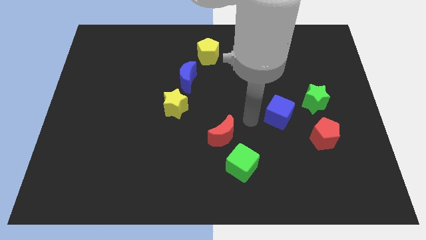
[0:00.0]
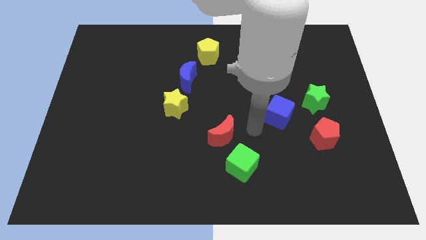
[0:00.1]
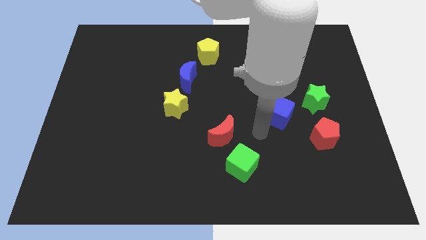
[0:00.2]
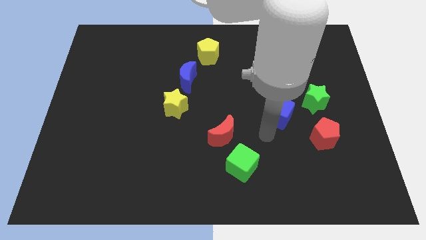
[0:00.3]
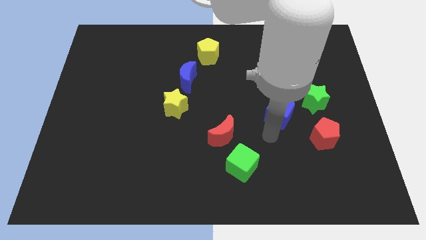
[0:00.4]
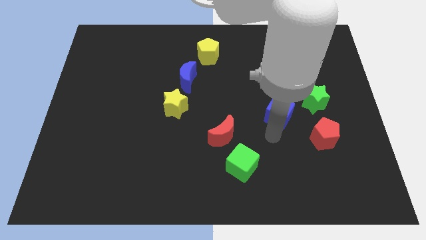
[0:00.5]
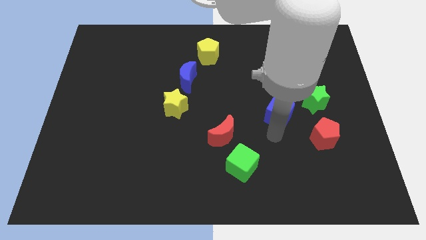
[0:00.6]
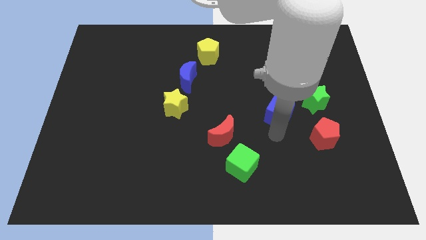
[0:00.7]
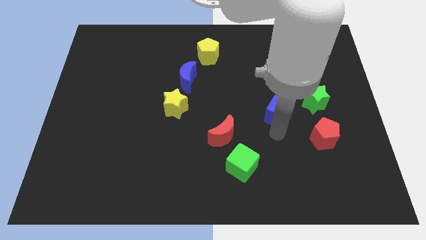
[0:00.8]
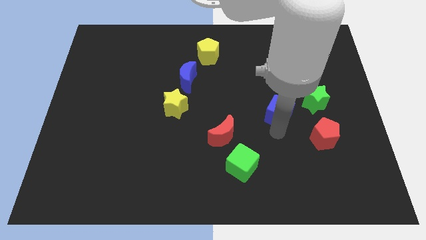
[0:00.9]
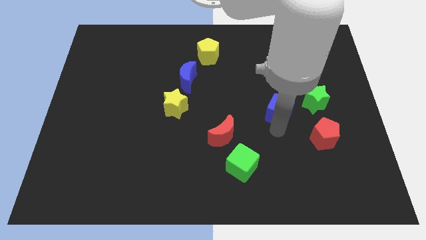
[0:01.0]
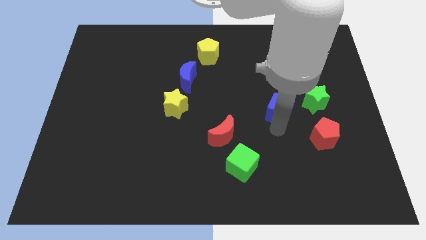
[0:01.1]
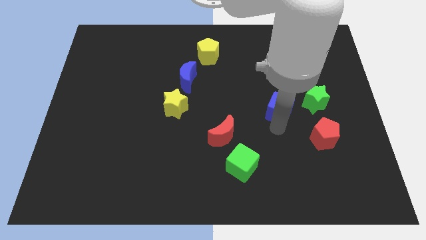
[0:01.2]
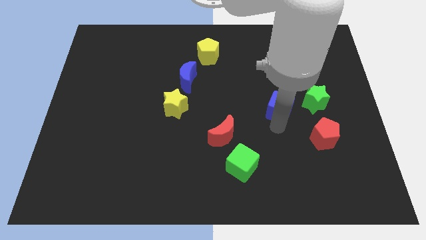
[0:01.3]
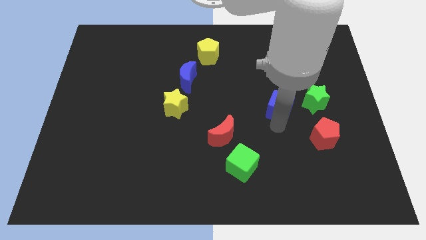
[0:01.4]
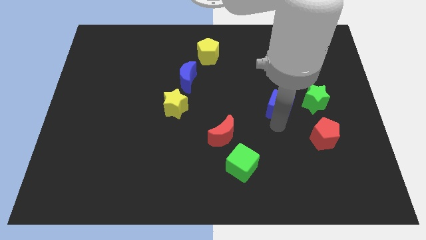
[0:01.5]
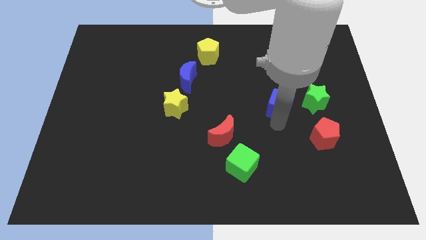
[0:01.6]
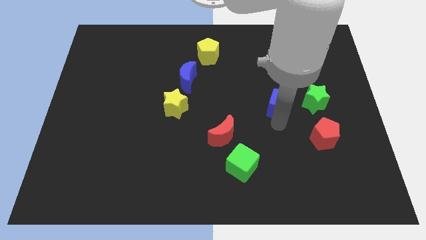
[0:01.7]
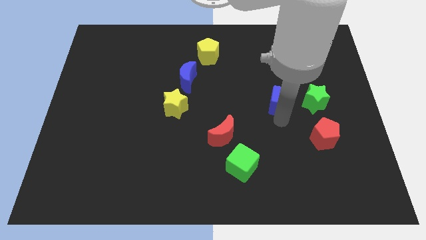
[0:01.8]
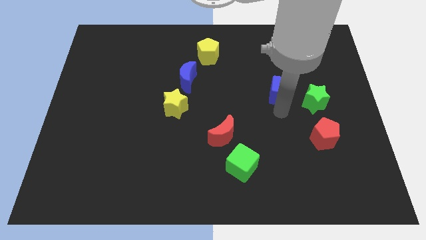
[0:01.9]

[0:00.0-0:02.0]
slide the blue cube slightly up

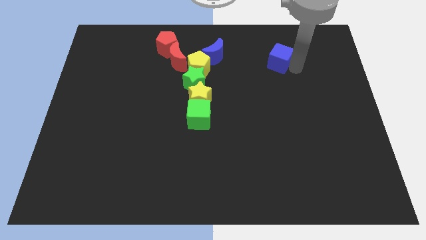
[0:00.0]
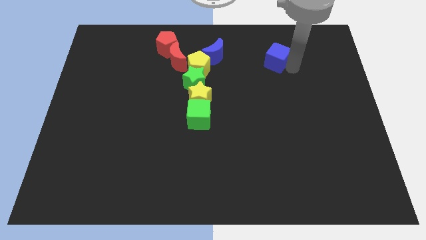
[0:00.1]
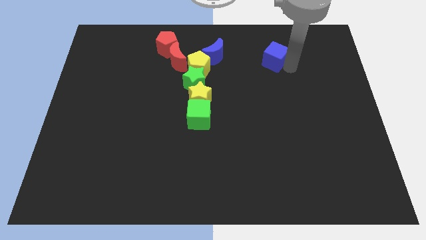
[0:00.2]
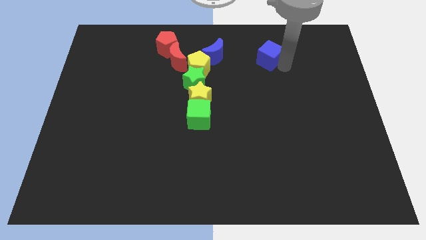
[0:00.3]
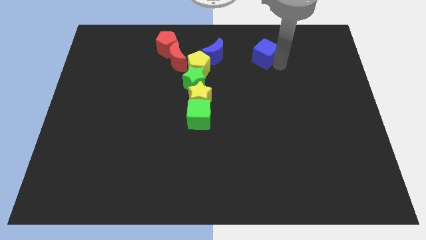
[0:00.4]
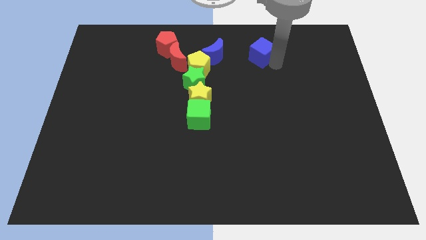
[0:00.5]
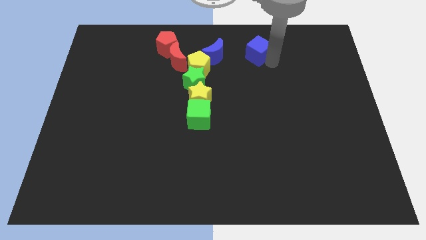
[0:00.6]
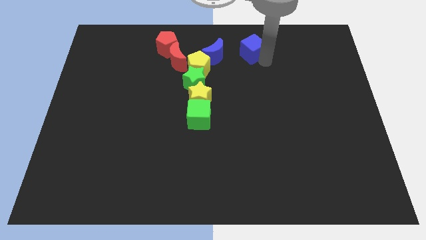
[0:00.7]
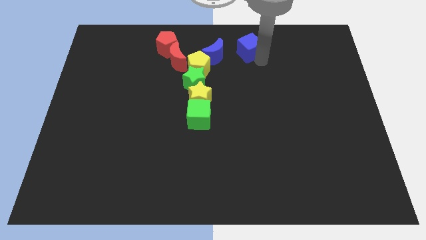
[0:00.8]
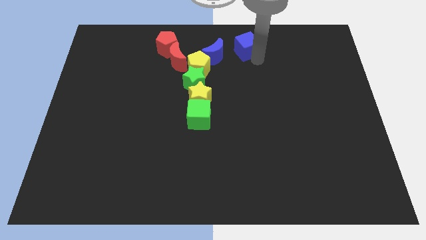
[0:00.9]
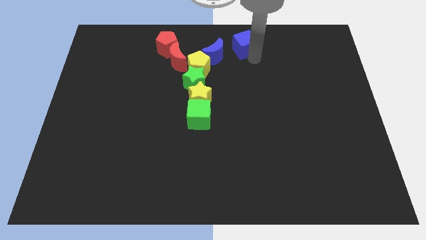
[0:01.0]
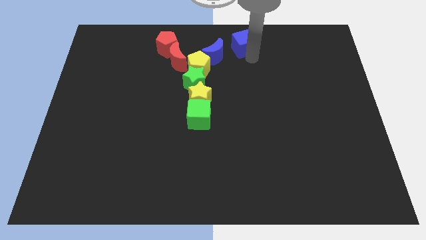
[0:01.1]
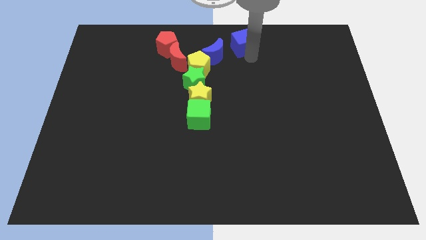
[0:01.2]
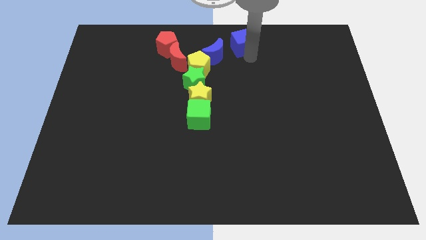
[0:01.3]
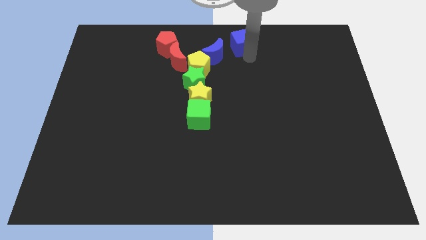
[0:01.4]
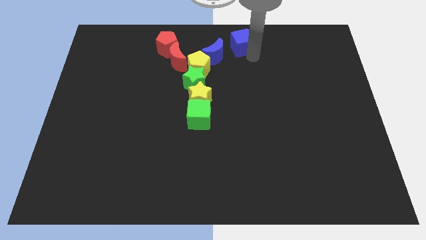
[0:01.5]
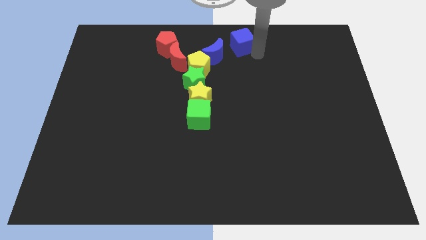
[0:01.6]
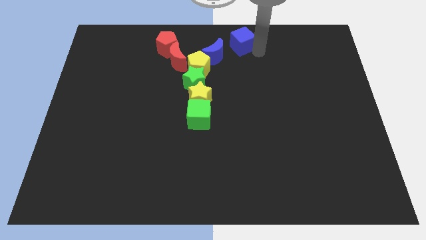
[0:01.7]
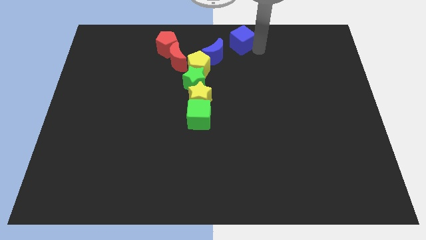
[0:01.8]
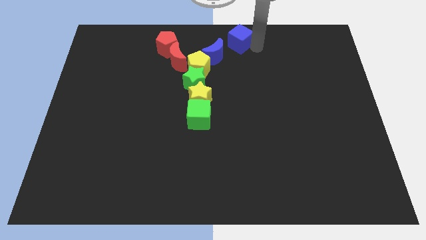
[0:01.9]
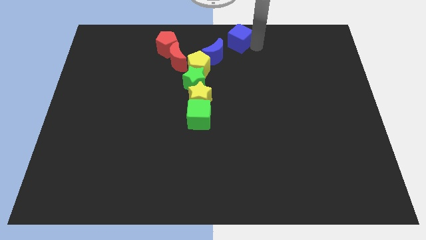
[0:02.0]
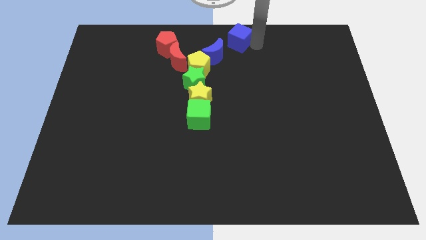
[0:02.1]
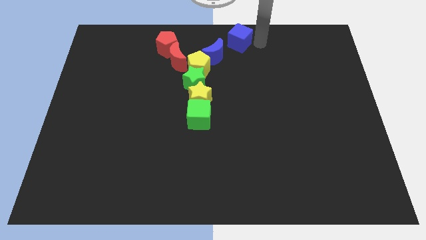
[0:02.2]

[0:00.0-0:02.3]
push the blue cube to the blue crescent

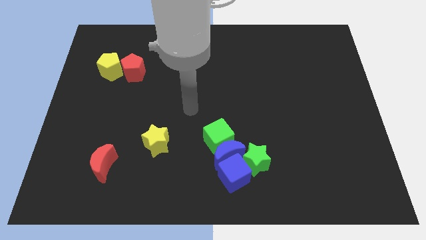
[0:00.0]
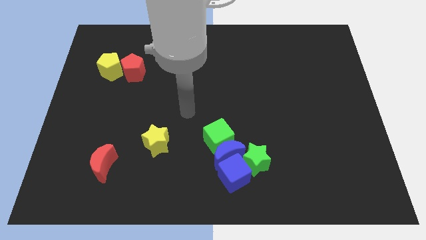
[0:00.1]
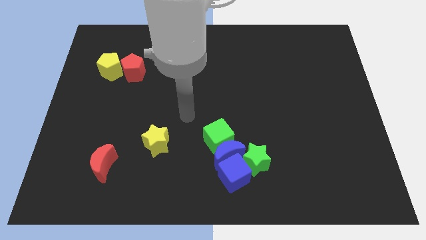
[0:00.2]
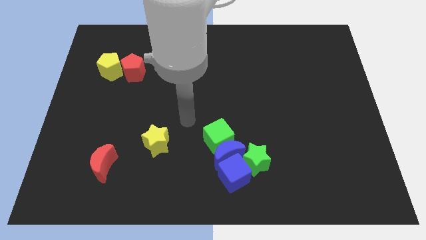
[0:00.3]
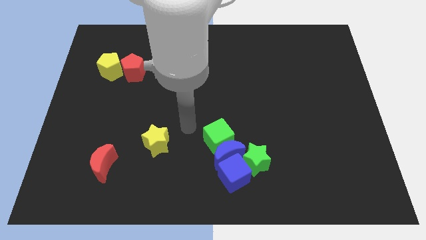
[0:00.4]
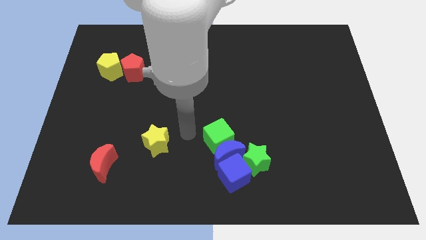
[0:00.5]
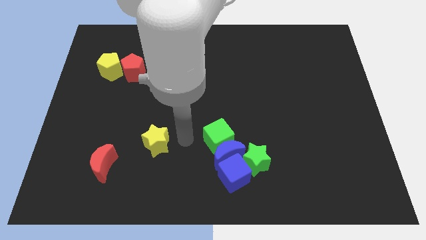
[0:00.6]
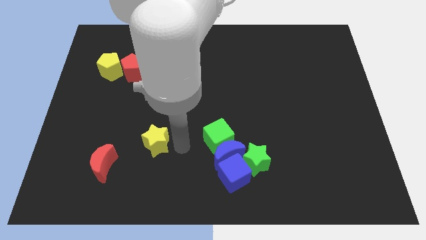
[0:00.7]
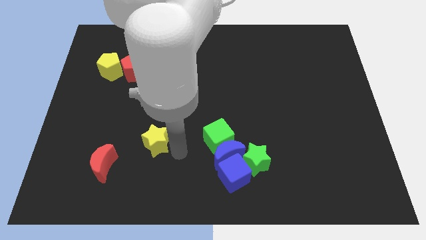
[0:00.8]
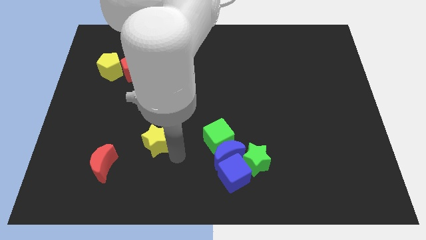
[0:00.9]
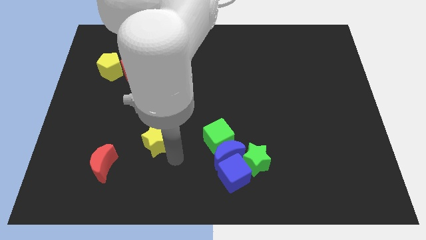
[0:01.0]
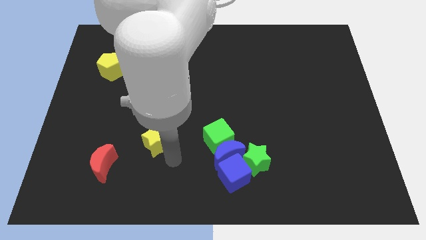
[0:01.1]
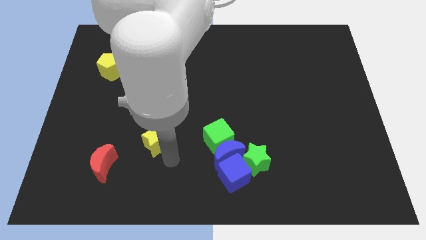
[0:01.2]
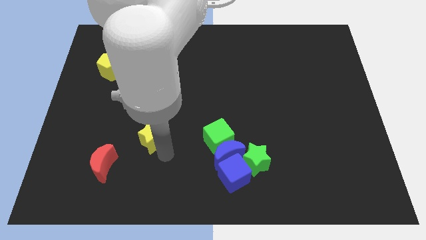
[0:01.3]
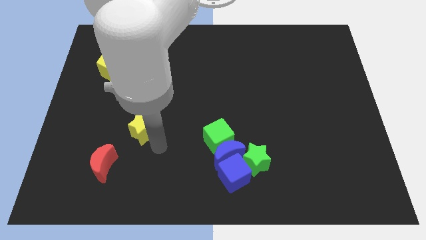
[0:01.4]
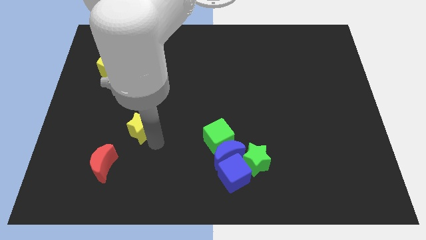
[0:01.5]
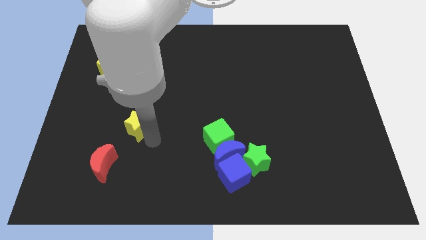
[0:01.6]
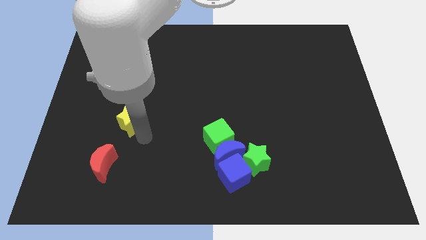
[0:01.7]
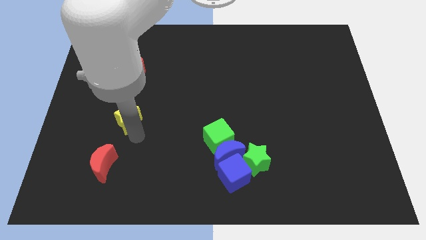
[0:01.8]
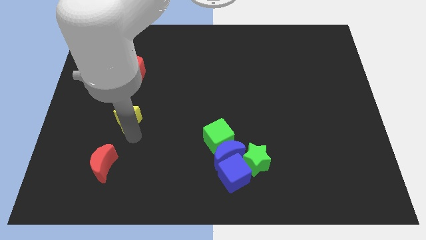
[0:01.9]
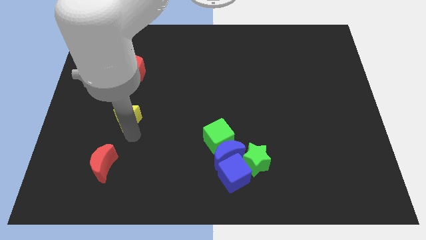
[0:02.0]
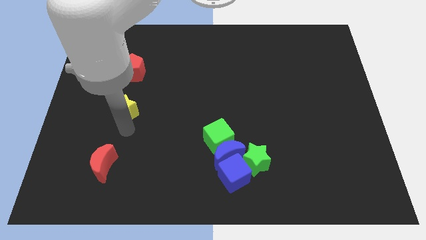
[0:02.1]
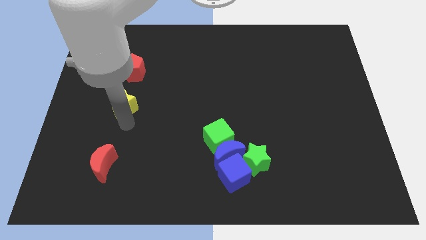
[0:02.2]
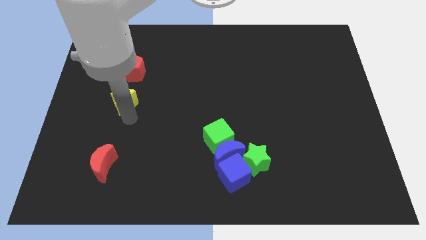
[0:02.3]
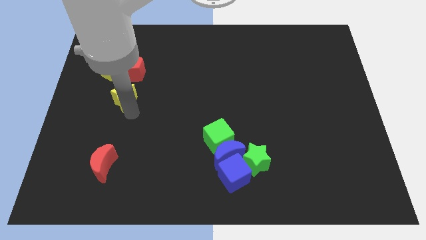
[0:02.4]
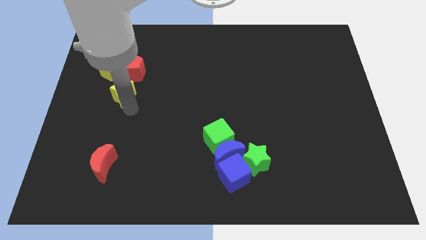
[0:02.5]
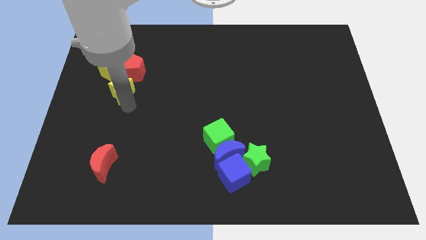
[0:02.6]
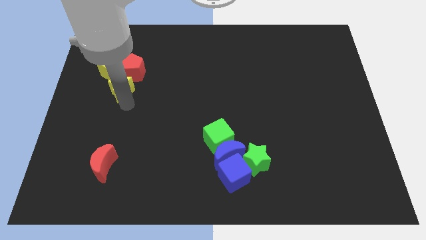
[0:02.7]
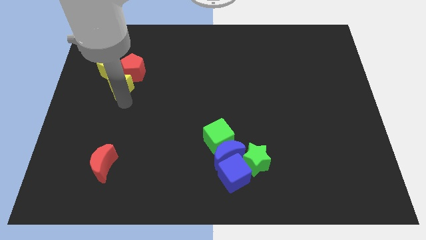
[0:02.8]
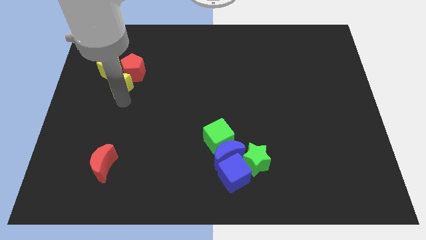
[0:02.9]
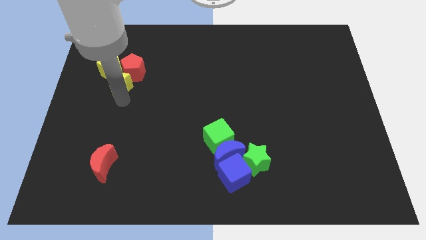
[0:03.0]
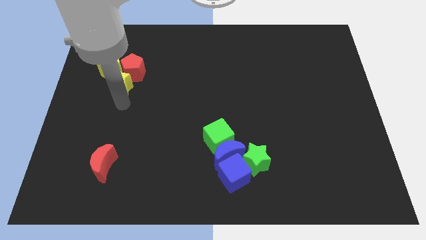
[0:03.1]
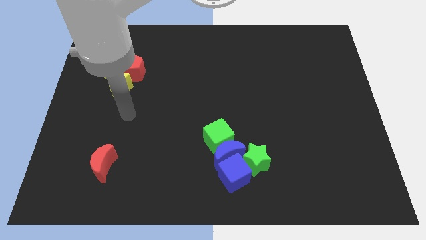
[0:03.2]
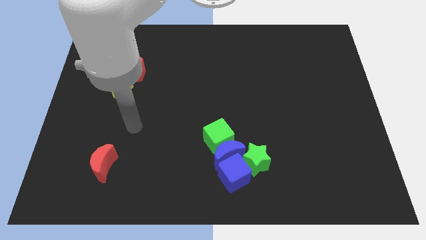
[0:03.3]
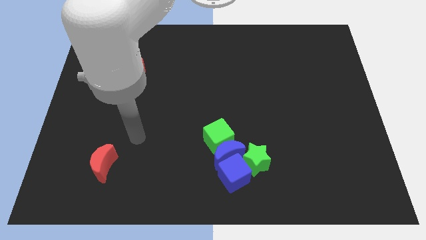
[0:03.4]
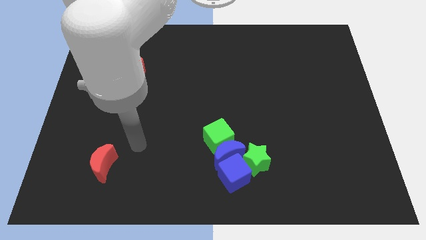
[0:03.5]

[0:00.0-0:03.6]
push the yellow star to the bottom left to the red pentagon

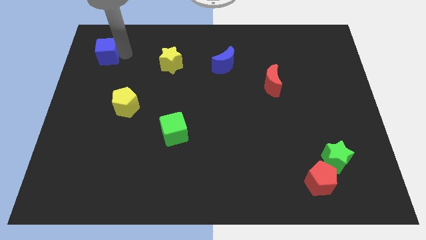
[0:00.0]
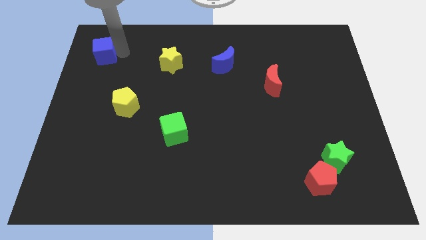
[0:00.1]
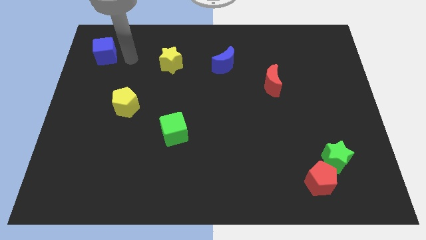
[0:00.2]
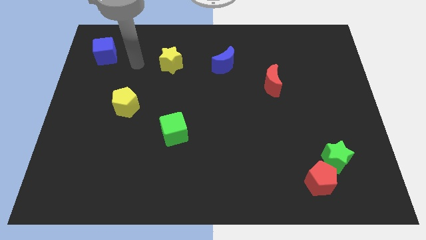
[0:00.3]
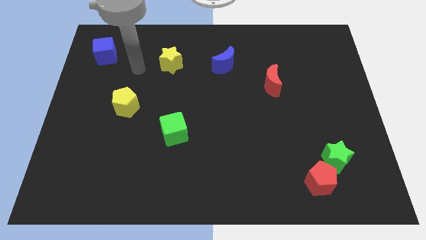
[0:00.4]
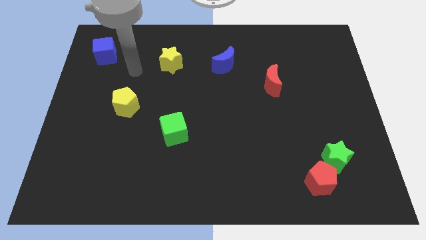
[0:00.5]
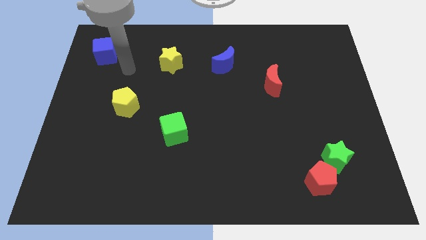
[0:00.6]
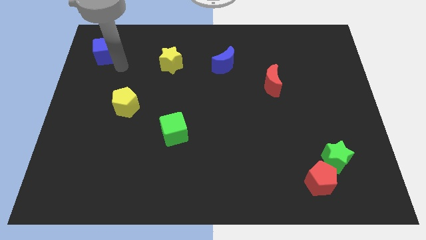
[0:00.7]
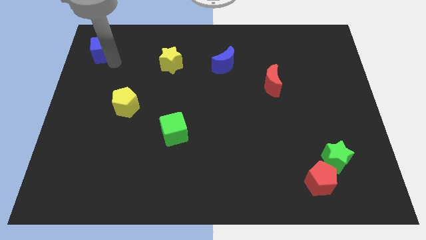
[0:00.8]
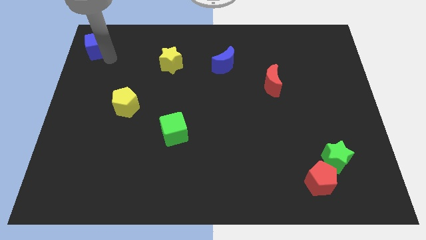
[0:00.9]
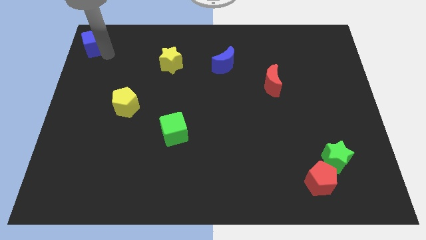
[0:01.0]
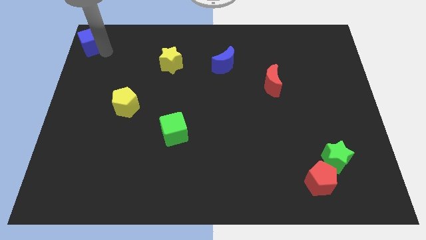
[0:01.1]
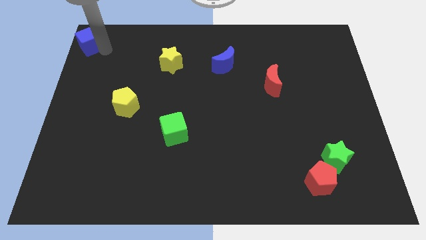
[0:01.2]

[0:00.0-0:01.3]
move the blue cube towards the top left
